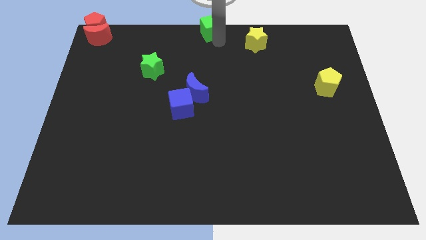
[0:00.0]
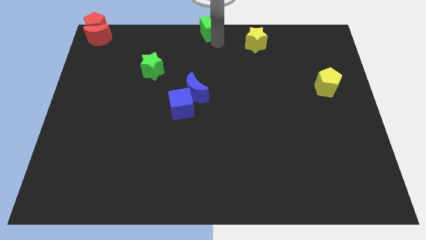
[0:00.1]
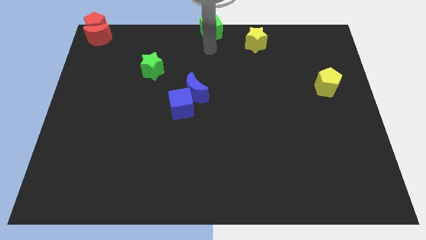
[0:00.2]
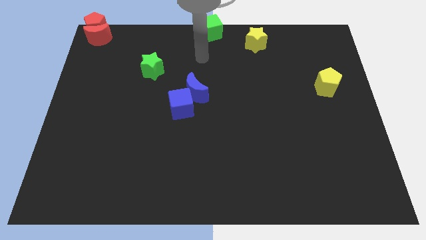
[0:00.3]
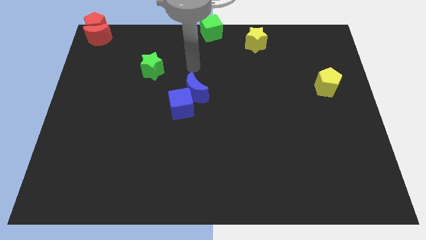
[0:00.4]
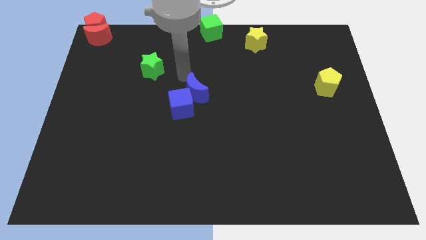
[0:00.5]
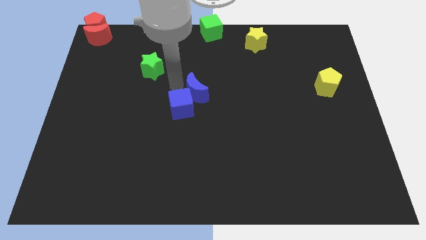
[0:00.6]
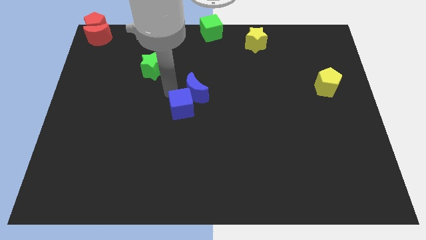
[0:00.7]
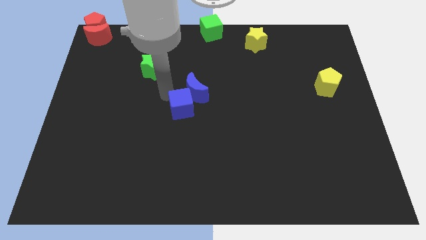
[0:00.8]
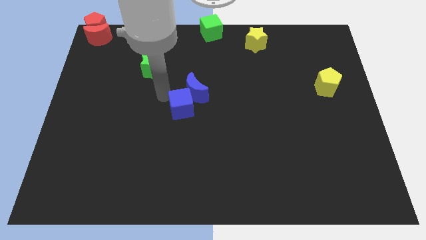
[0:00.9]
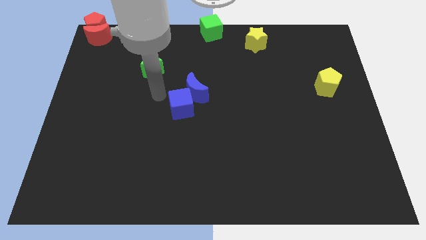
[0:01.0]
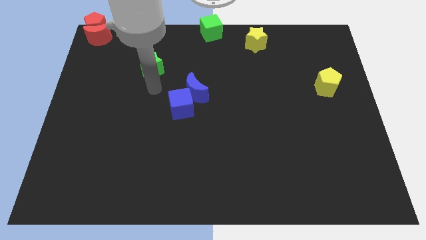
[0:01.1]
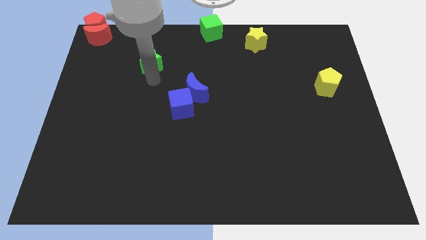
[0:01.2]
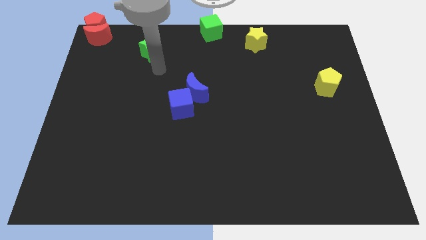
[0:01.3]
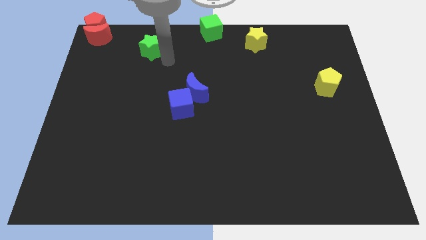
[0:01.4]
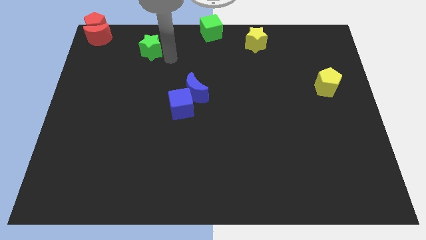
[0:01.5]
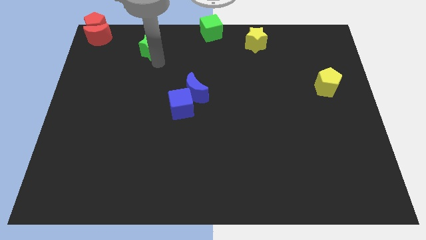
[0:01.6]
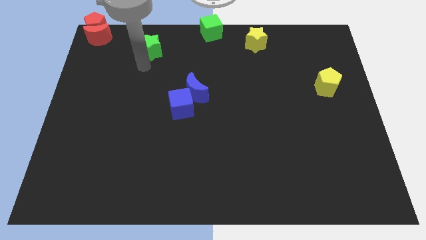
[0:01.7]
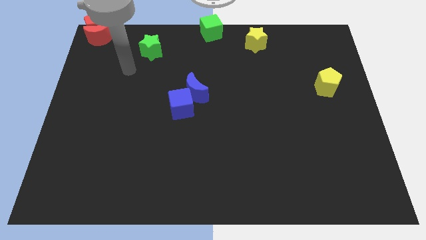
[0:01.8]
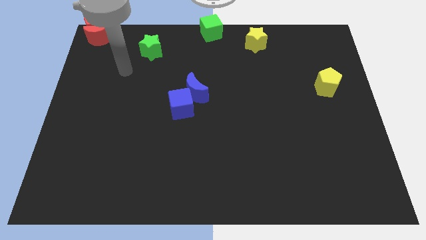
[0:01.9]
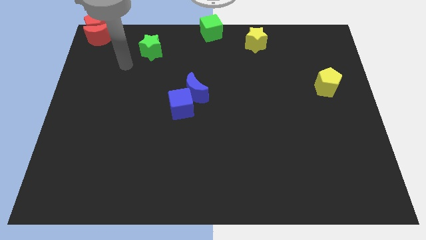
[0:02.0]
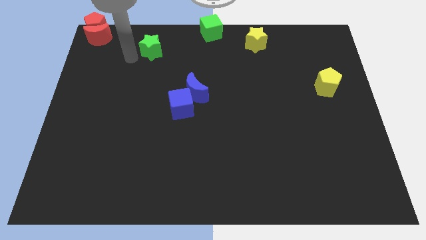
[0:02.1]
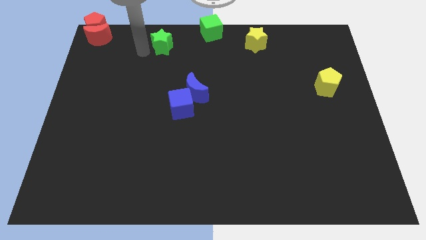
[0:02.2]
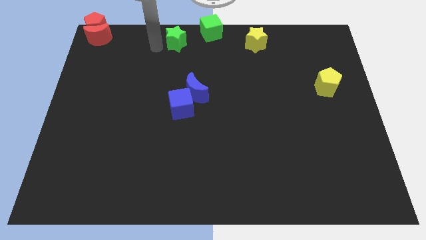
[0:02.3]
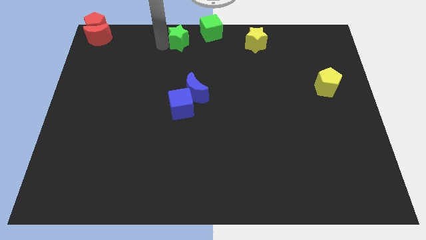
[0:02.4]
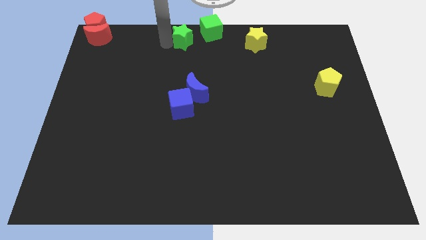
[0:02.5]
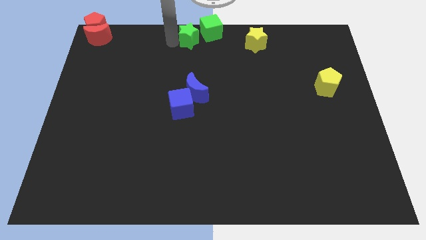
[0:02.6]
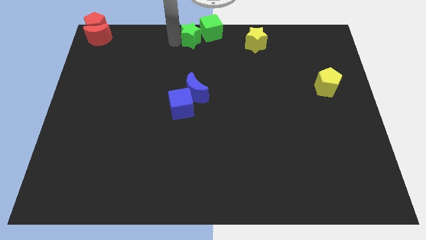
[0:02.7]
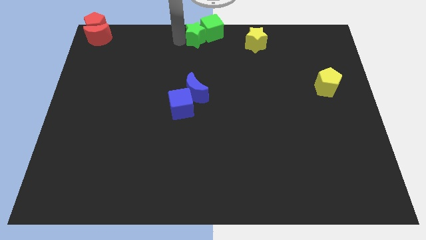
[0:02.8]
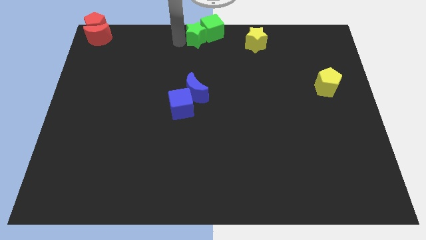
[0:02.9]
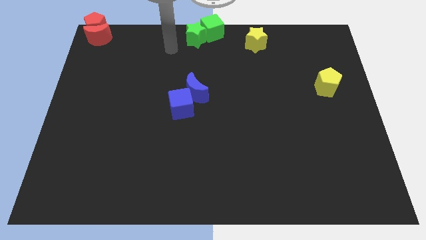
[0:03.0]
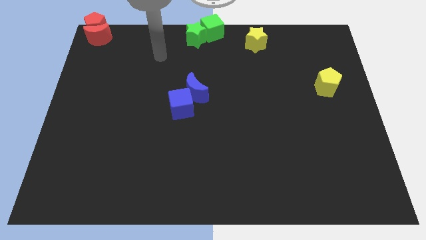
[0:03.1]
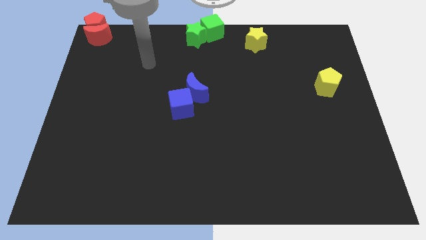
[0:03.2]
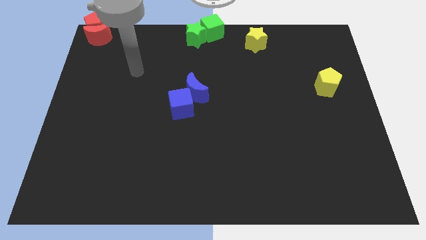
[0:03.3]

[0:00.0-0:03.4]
place the green star left to the green cube

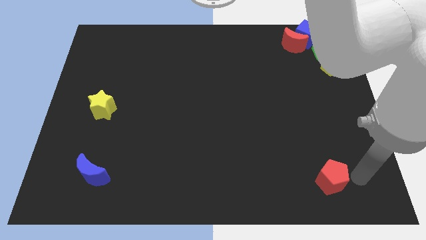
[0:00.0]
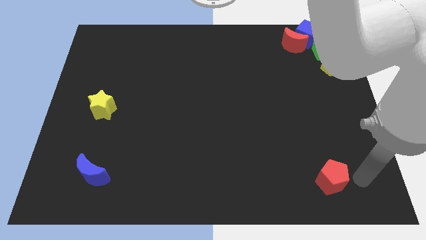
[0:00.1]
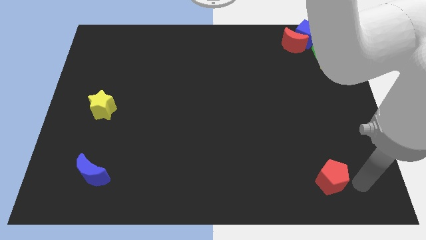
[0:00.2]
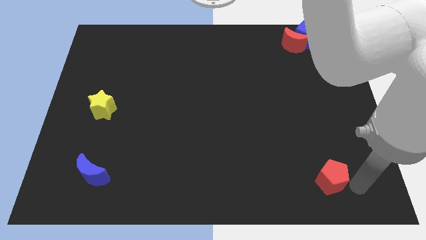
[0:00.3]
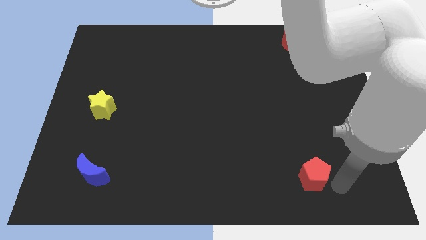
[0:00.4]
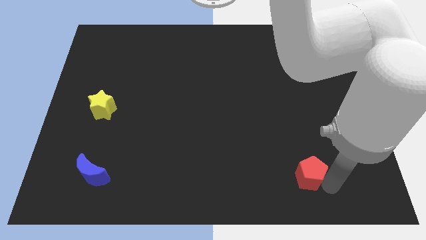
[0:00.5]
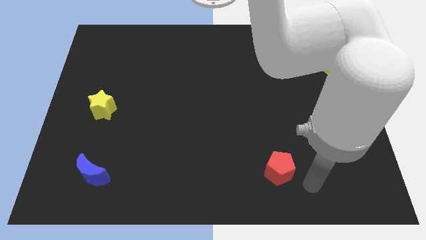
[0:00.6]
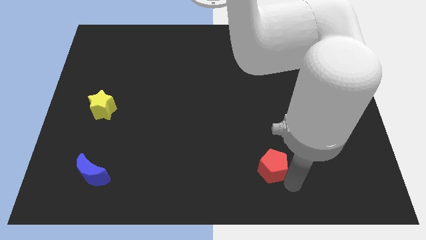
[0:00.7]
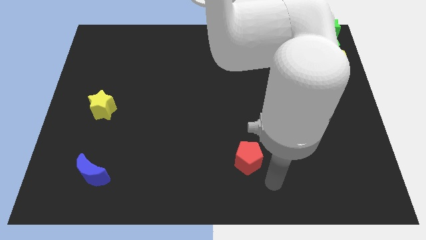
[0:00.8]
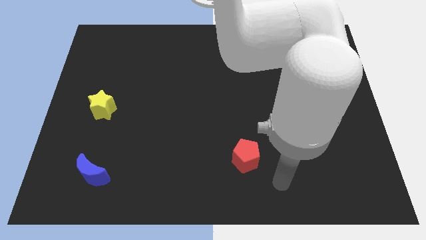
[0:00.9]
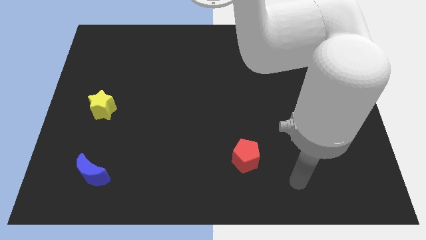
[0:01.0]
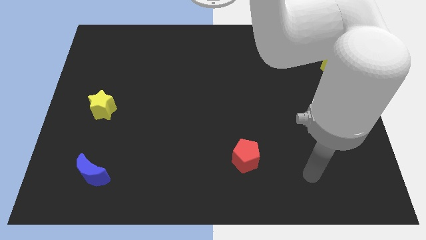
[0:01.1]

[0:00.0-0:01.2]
push the red pentagon to the left of the board

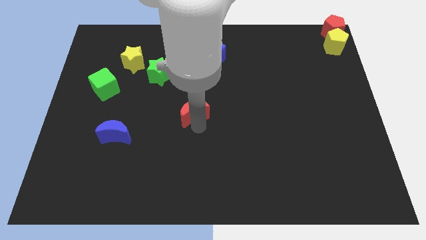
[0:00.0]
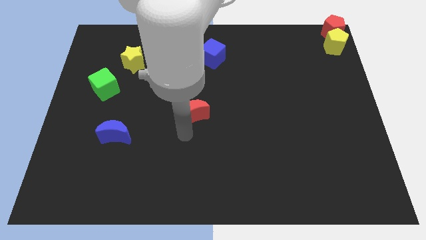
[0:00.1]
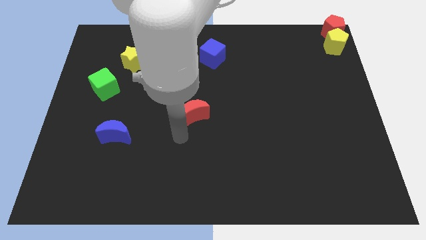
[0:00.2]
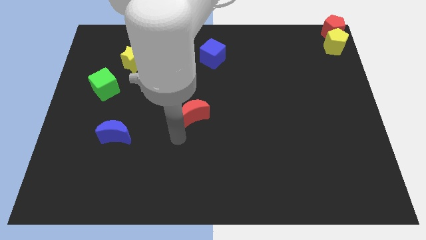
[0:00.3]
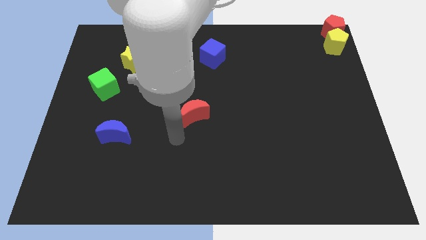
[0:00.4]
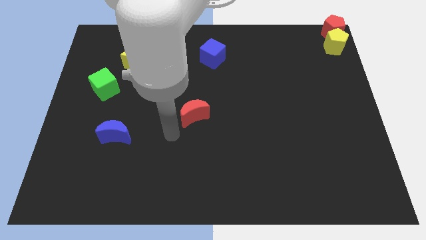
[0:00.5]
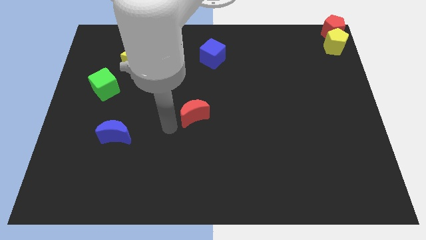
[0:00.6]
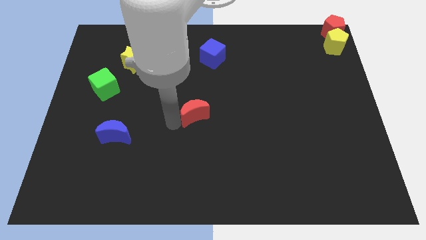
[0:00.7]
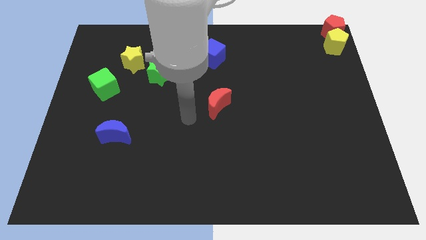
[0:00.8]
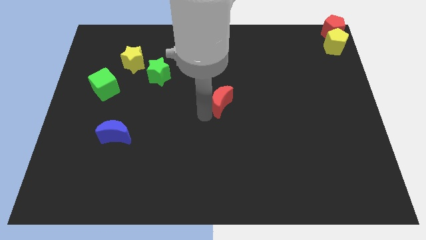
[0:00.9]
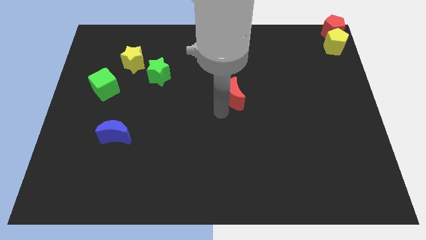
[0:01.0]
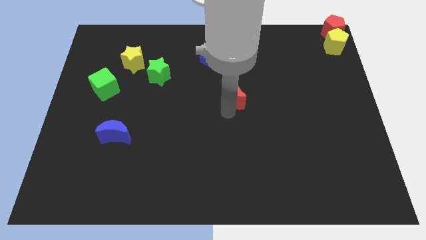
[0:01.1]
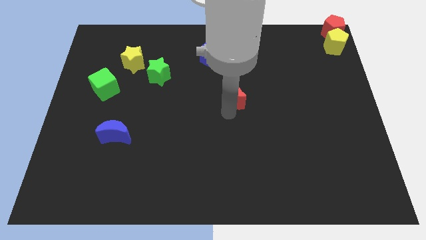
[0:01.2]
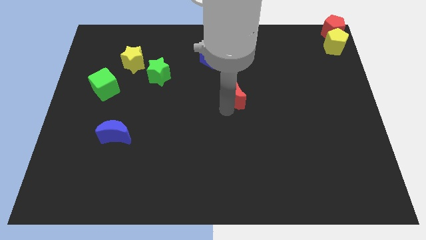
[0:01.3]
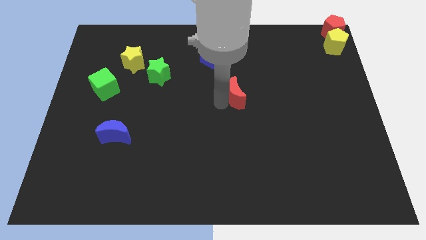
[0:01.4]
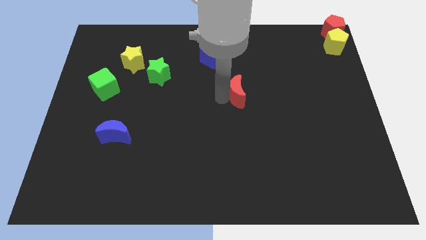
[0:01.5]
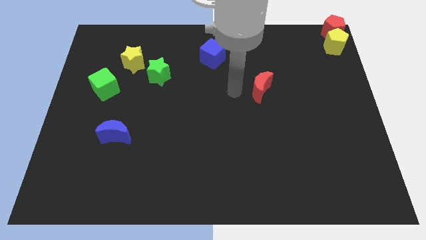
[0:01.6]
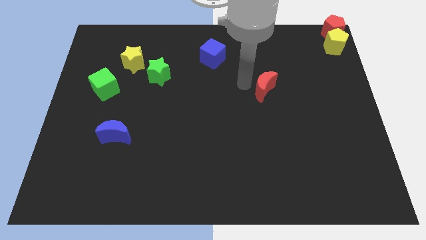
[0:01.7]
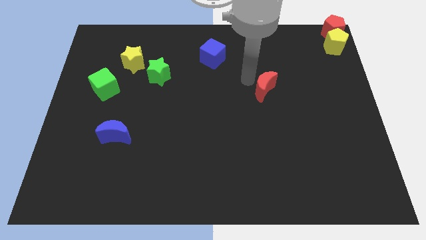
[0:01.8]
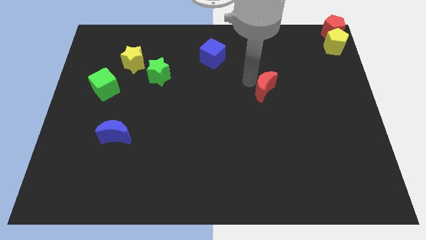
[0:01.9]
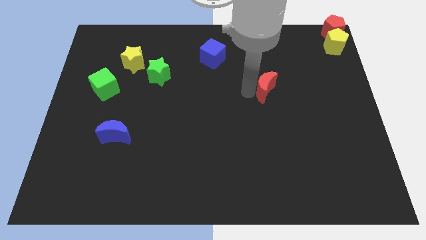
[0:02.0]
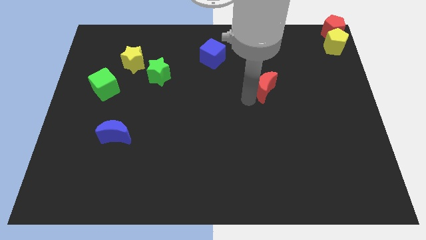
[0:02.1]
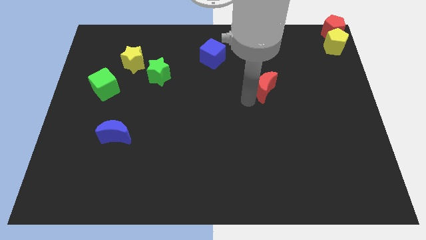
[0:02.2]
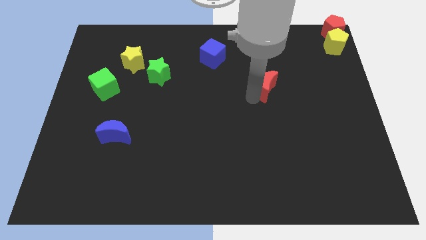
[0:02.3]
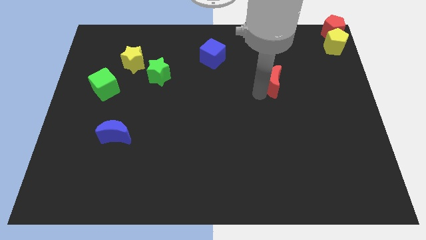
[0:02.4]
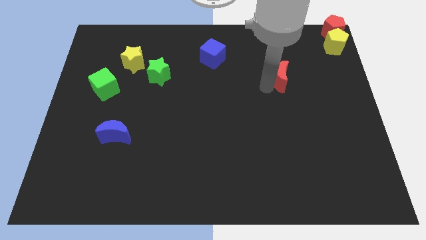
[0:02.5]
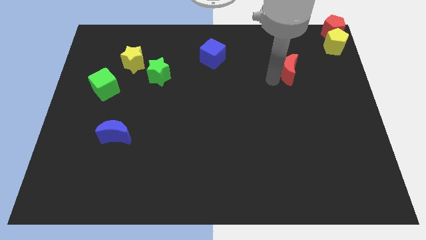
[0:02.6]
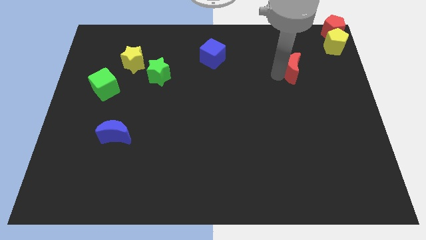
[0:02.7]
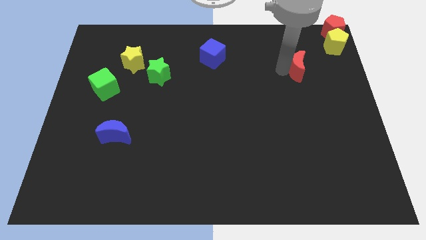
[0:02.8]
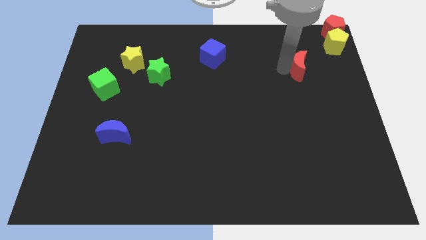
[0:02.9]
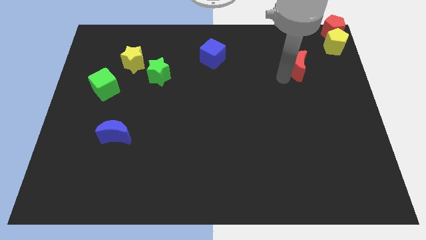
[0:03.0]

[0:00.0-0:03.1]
move the red crescent towards the left side of the yellow pentagon

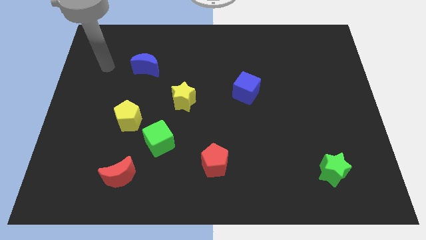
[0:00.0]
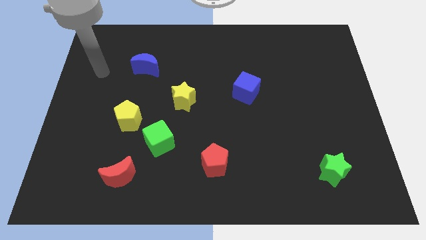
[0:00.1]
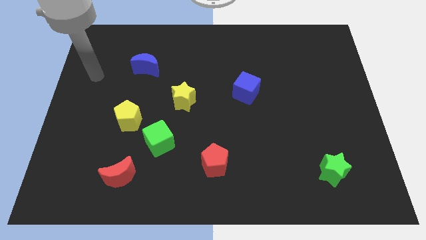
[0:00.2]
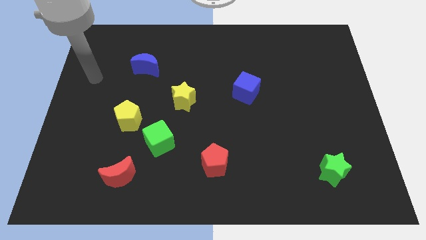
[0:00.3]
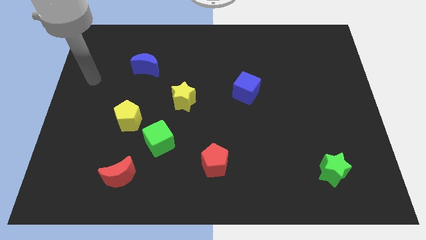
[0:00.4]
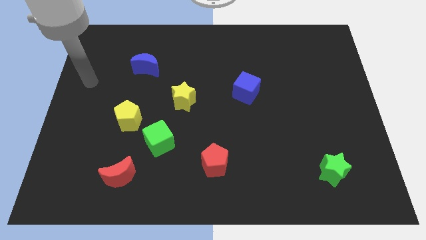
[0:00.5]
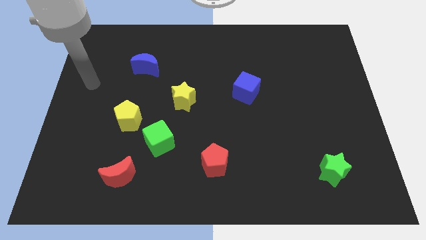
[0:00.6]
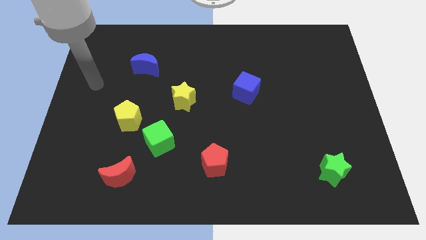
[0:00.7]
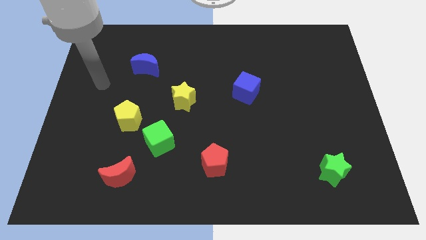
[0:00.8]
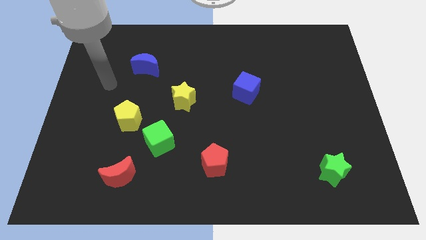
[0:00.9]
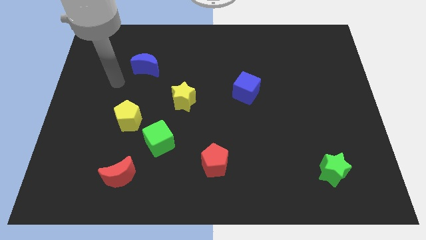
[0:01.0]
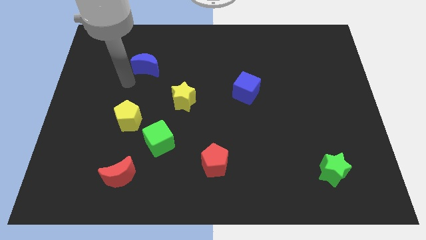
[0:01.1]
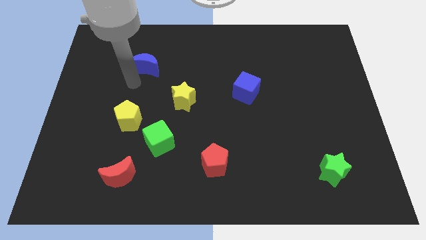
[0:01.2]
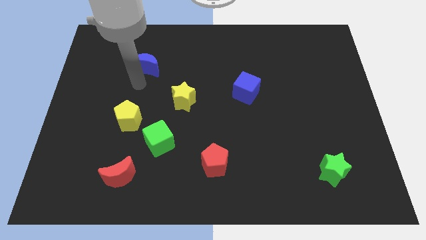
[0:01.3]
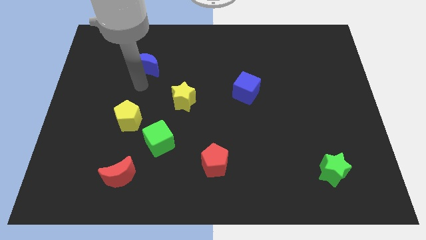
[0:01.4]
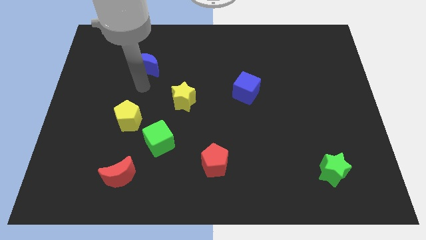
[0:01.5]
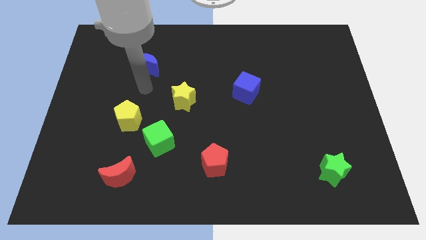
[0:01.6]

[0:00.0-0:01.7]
put your hand vertically below the blue moon
